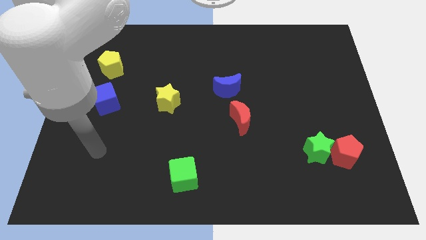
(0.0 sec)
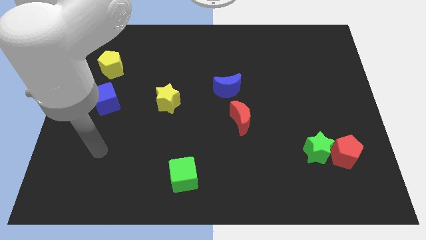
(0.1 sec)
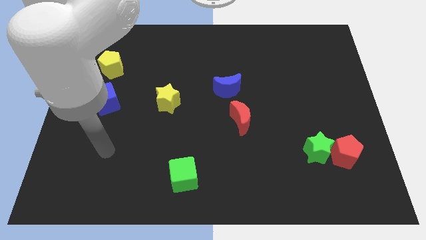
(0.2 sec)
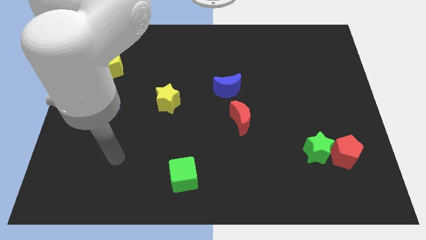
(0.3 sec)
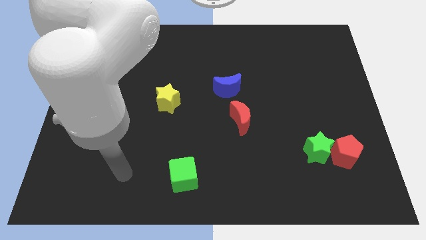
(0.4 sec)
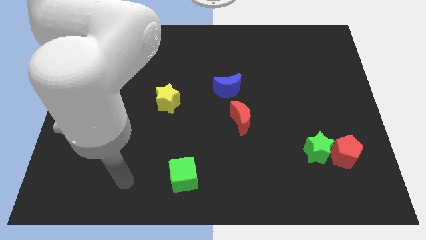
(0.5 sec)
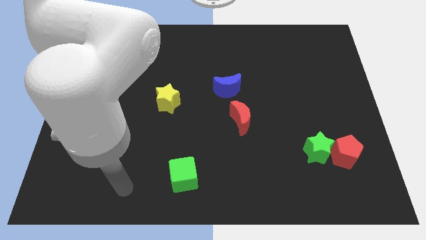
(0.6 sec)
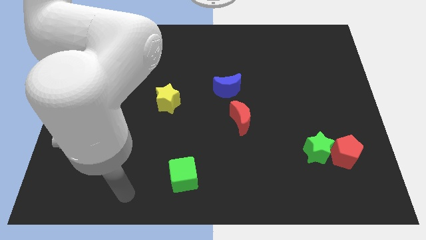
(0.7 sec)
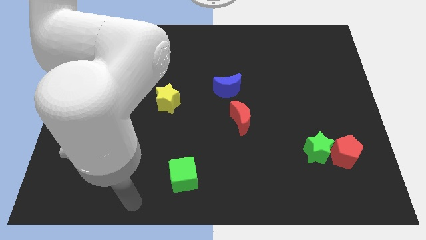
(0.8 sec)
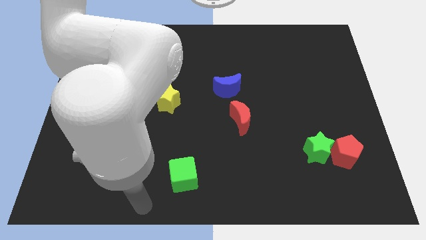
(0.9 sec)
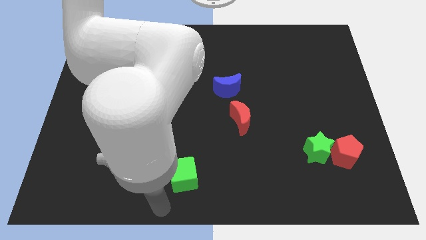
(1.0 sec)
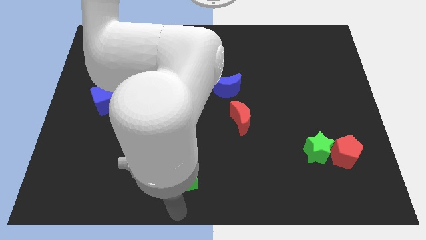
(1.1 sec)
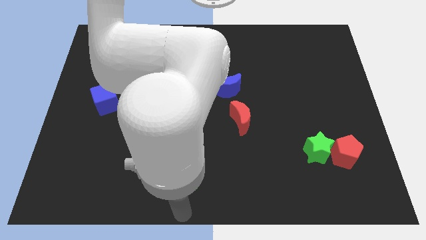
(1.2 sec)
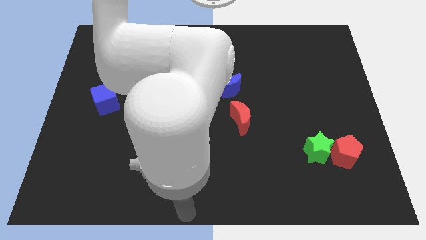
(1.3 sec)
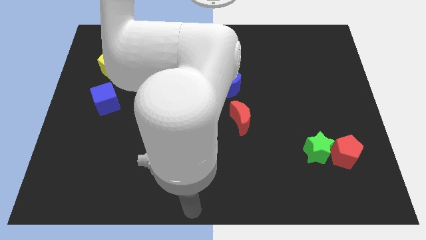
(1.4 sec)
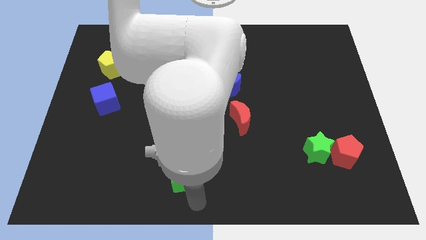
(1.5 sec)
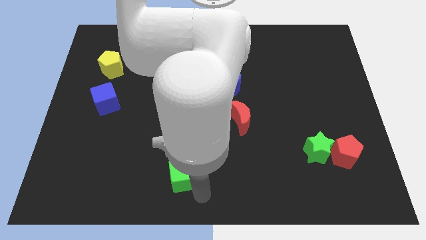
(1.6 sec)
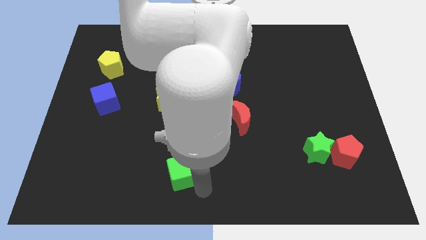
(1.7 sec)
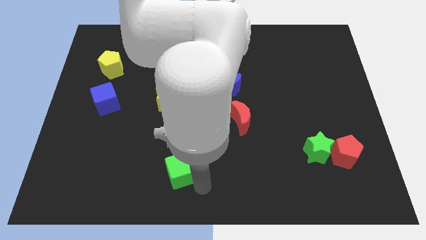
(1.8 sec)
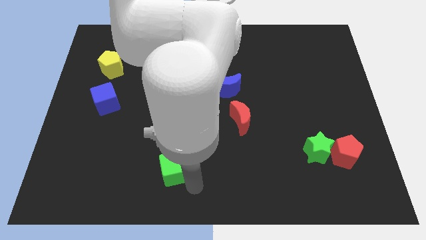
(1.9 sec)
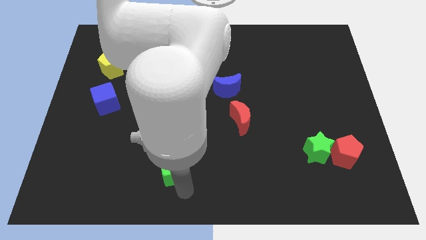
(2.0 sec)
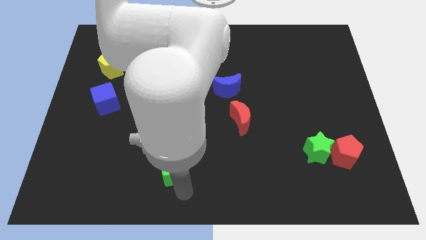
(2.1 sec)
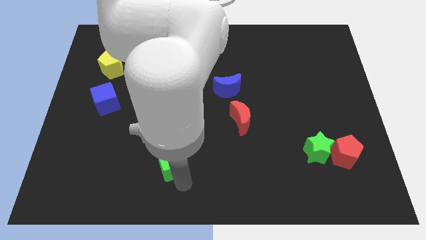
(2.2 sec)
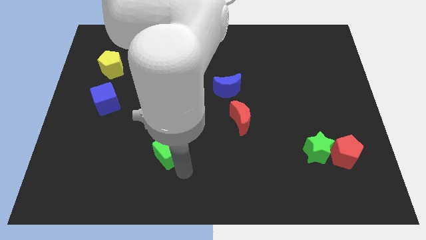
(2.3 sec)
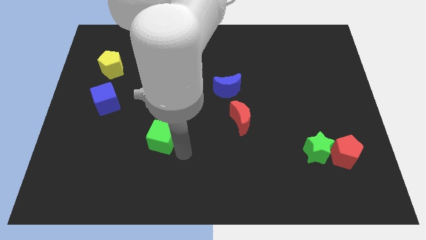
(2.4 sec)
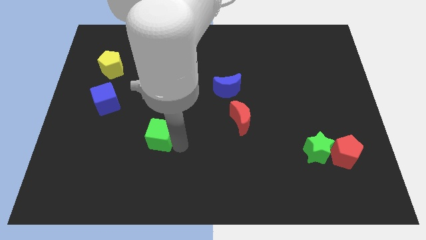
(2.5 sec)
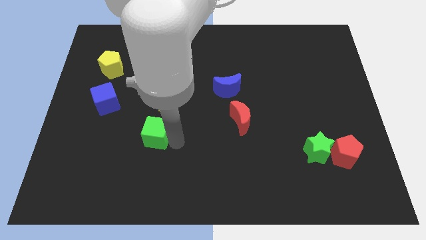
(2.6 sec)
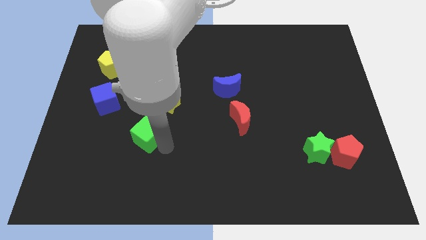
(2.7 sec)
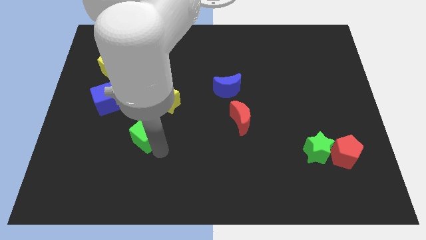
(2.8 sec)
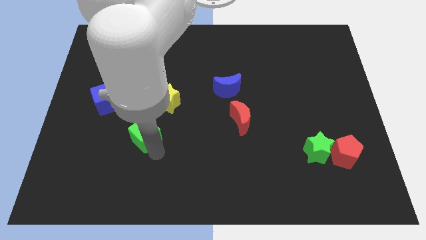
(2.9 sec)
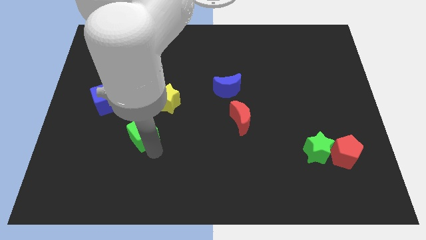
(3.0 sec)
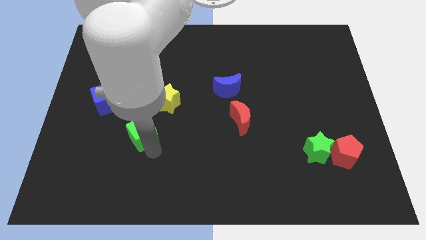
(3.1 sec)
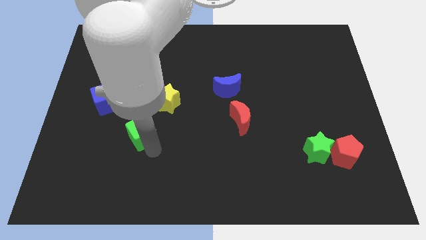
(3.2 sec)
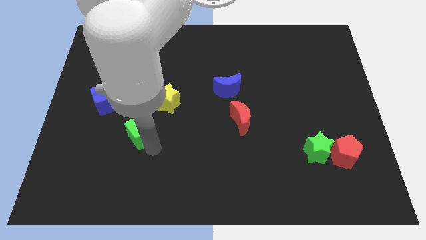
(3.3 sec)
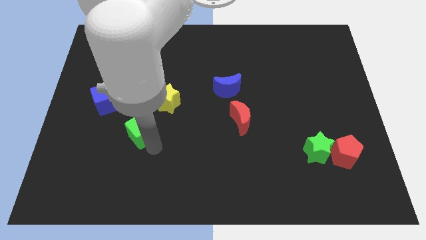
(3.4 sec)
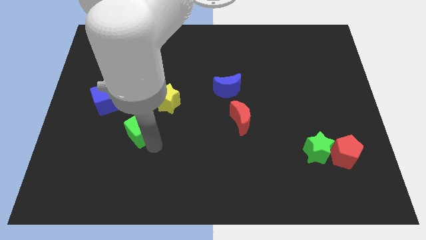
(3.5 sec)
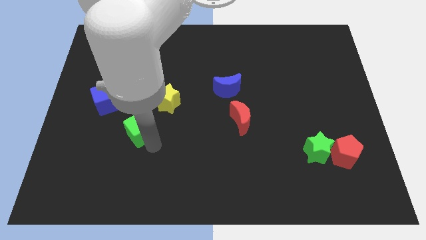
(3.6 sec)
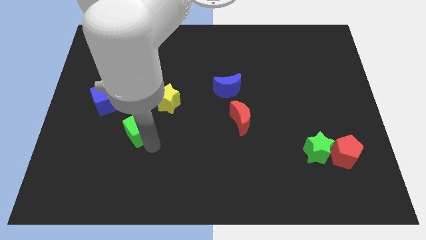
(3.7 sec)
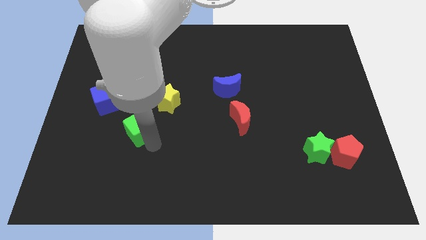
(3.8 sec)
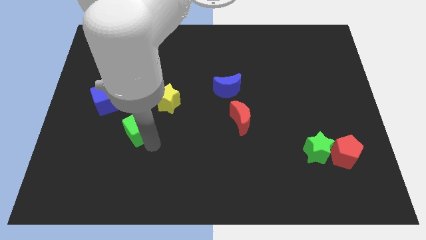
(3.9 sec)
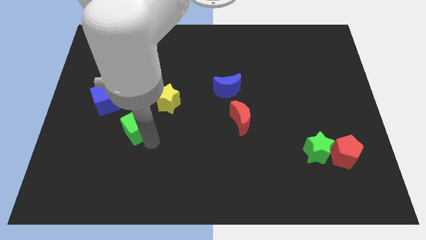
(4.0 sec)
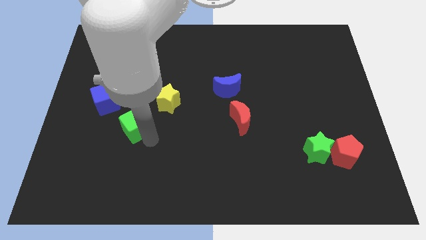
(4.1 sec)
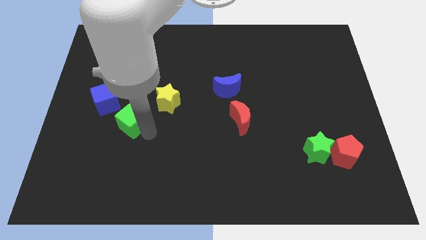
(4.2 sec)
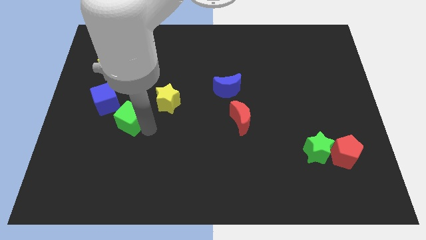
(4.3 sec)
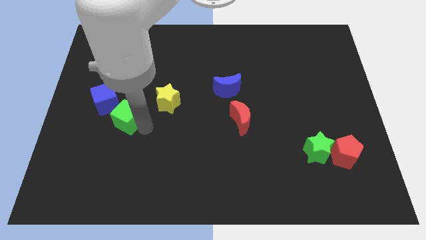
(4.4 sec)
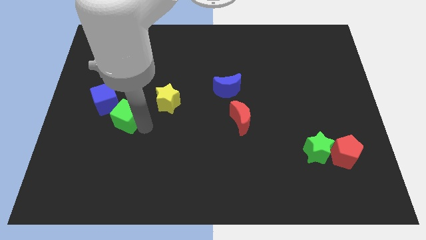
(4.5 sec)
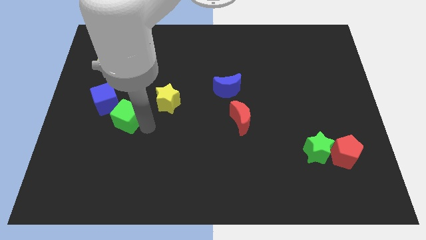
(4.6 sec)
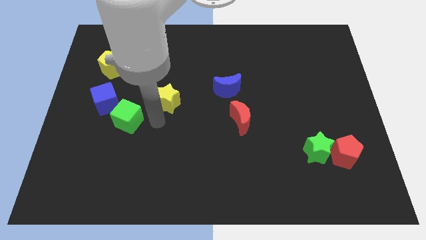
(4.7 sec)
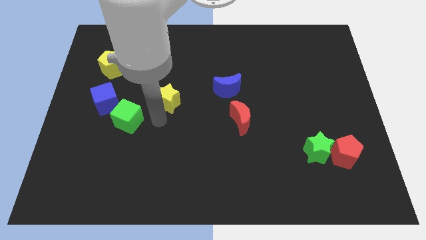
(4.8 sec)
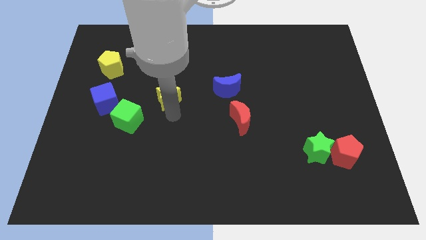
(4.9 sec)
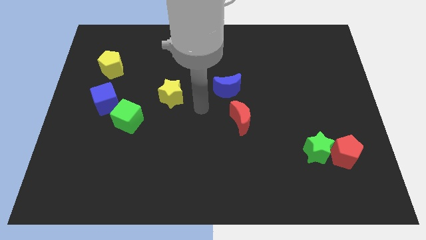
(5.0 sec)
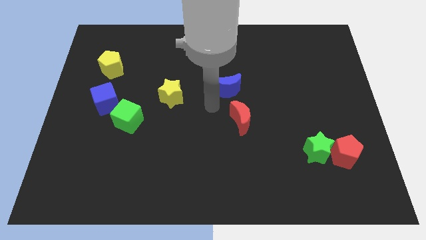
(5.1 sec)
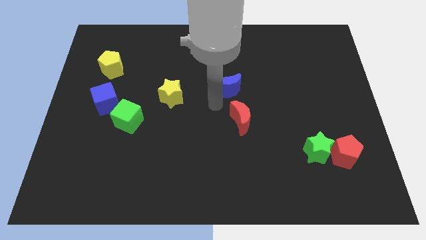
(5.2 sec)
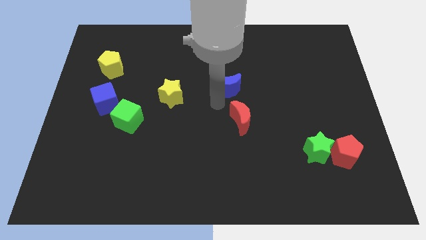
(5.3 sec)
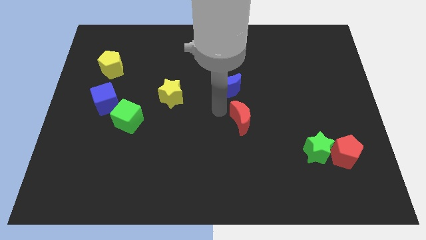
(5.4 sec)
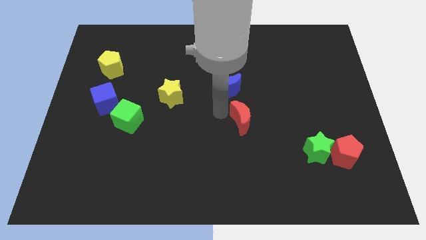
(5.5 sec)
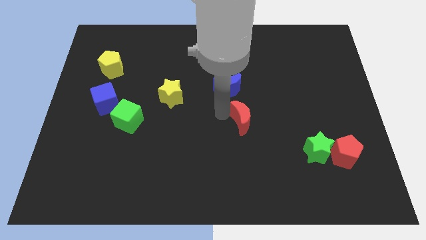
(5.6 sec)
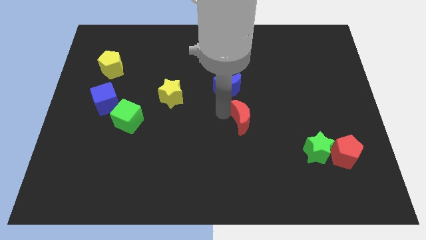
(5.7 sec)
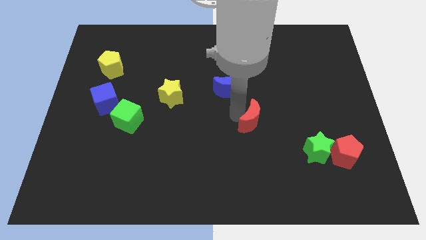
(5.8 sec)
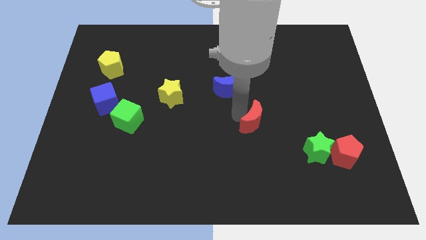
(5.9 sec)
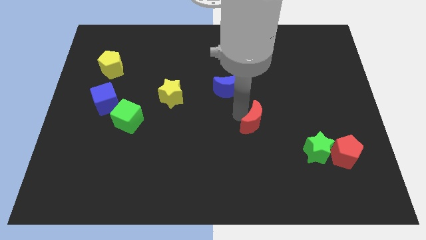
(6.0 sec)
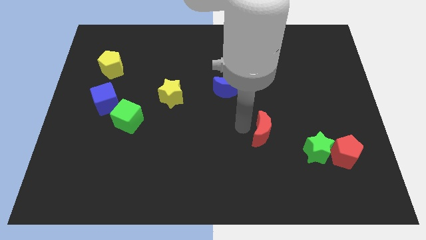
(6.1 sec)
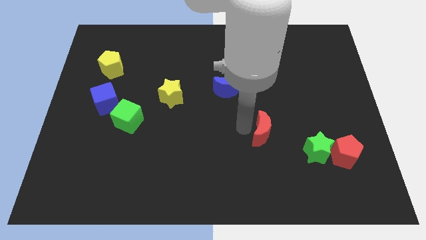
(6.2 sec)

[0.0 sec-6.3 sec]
push the green cube next to the yellow pentagon

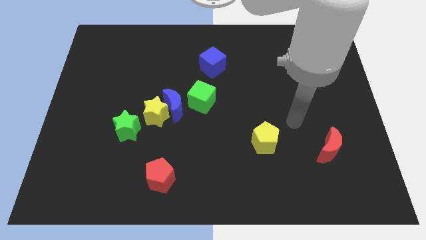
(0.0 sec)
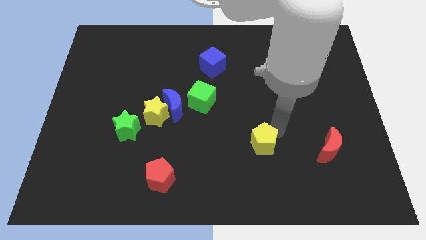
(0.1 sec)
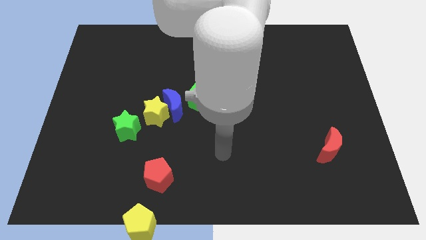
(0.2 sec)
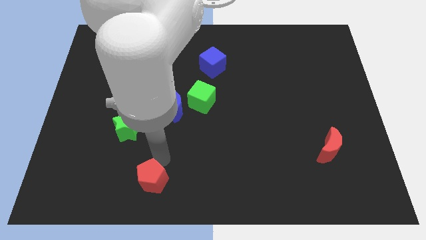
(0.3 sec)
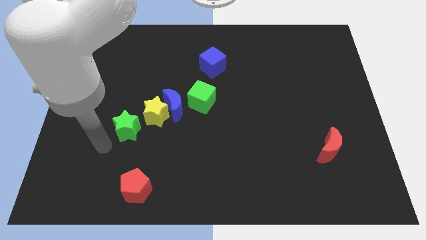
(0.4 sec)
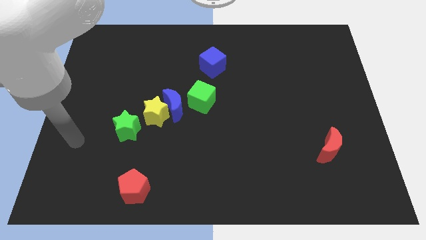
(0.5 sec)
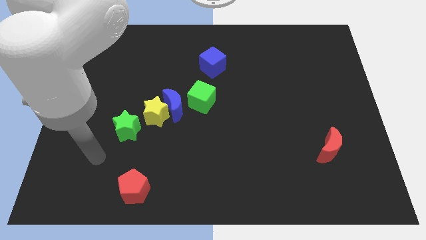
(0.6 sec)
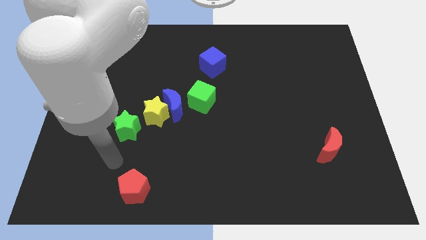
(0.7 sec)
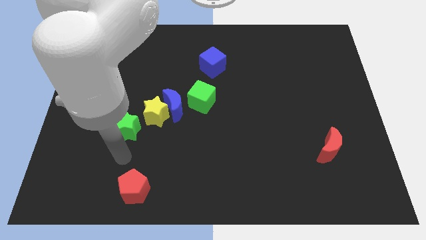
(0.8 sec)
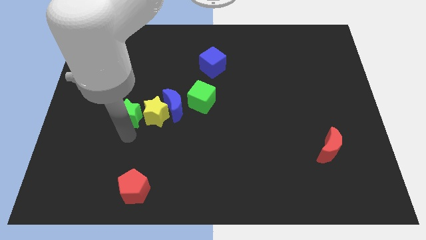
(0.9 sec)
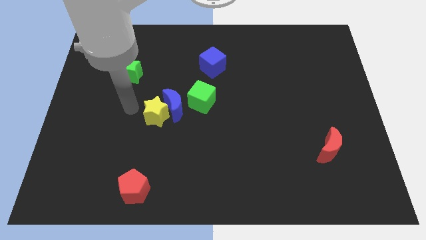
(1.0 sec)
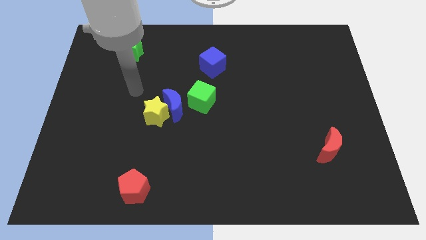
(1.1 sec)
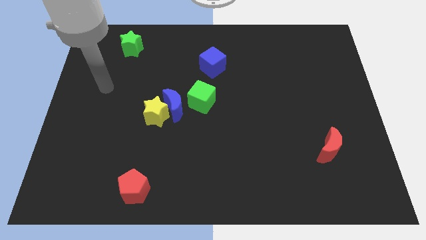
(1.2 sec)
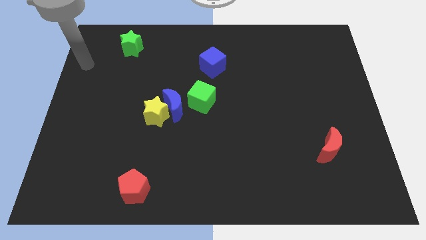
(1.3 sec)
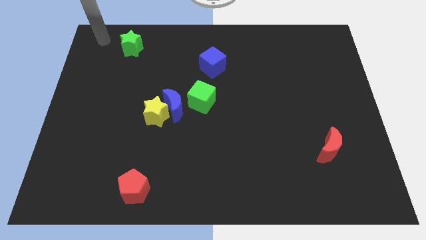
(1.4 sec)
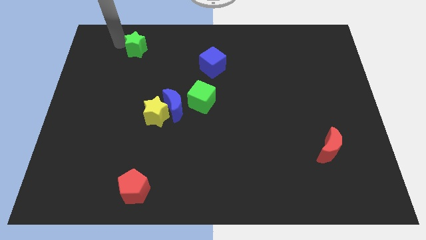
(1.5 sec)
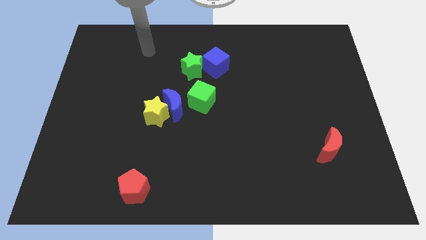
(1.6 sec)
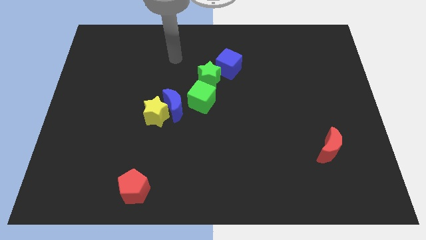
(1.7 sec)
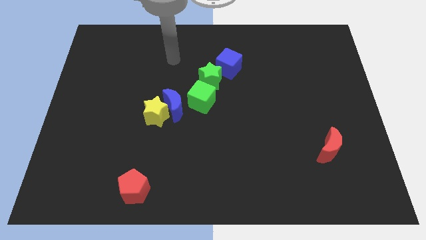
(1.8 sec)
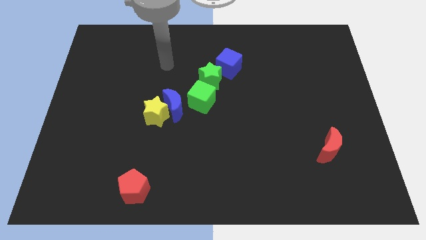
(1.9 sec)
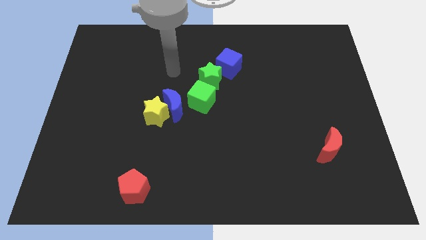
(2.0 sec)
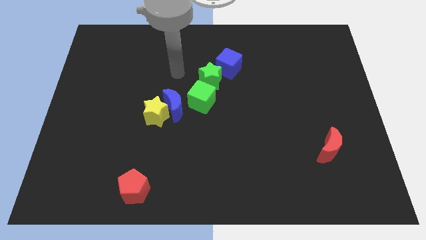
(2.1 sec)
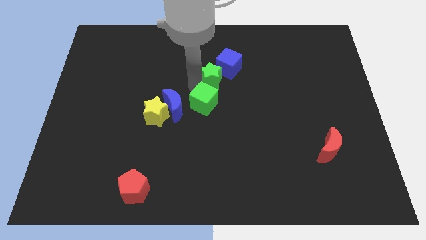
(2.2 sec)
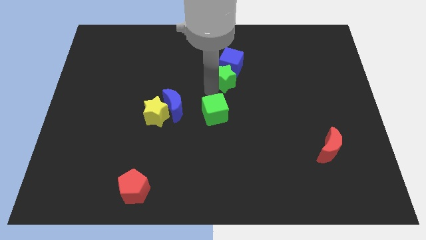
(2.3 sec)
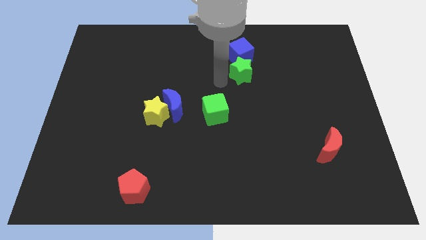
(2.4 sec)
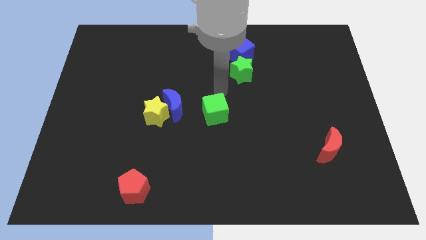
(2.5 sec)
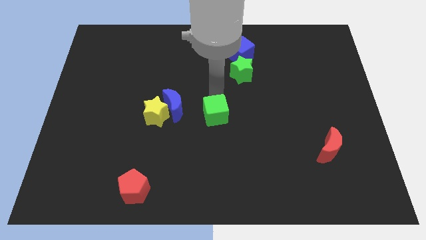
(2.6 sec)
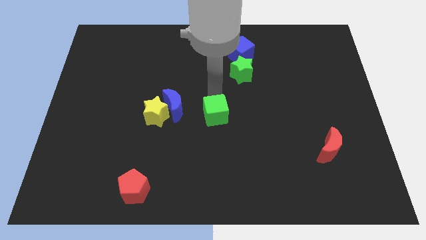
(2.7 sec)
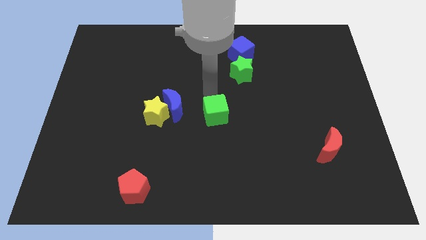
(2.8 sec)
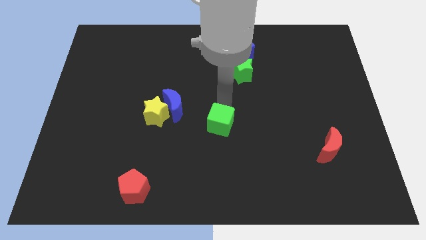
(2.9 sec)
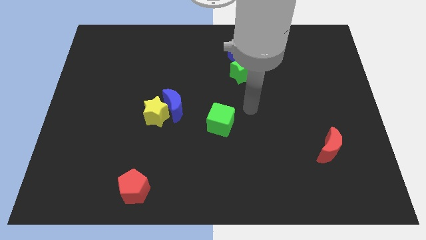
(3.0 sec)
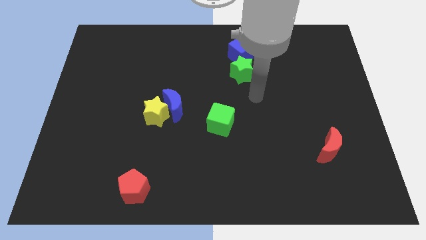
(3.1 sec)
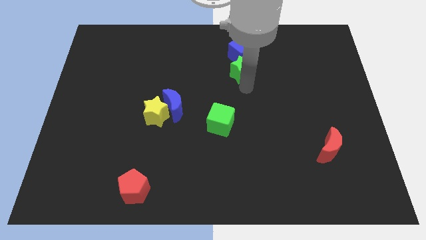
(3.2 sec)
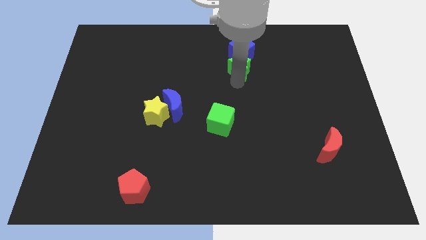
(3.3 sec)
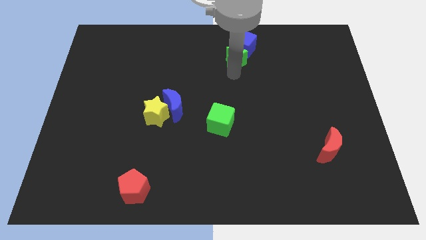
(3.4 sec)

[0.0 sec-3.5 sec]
slide the green star next to the blue cube
